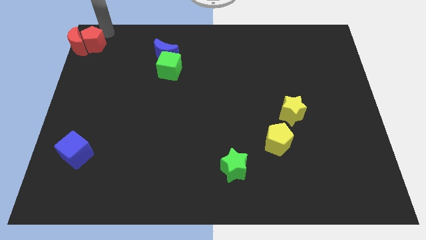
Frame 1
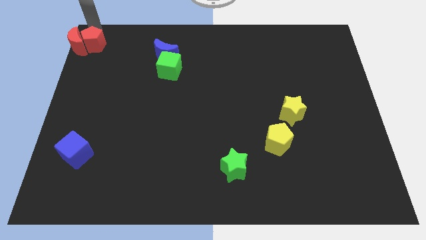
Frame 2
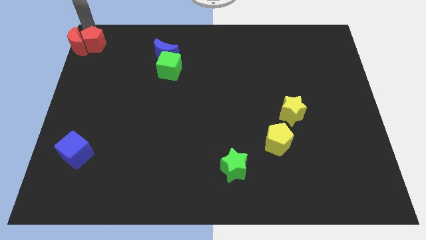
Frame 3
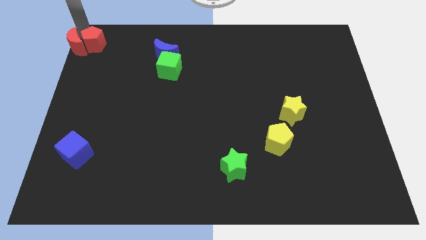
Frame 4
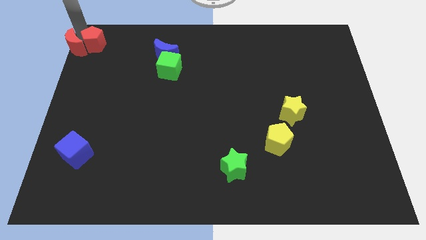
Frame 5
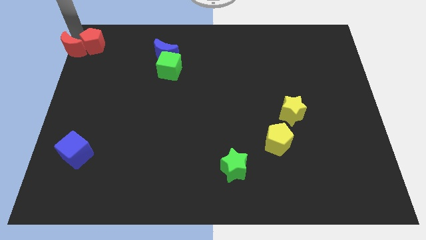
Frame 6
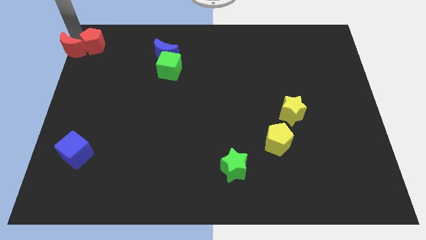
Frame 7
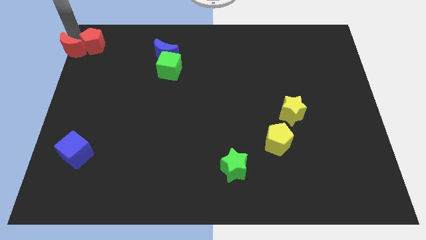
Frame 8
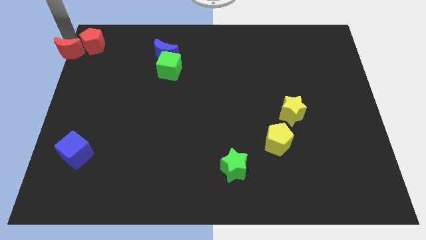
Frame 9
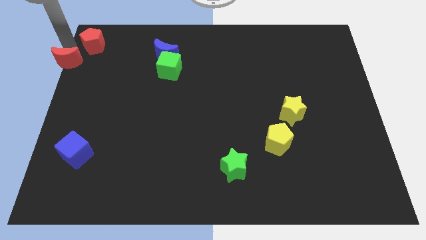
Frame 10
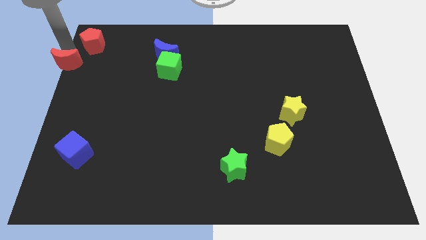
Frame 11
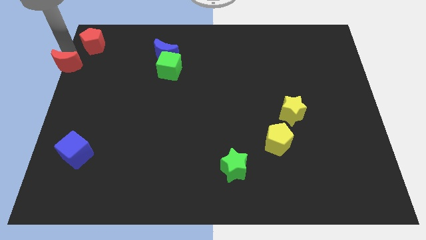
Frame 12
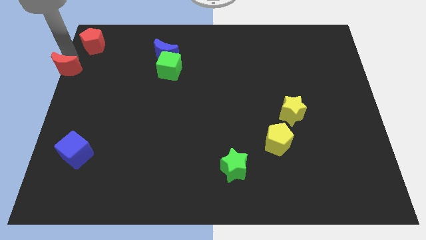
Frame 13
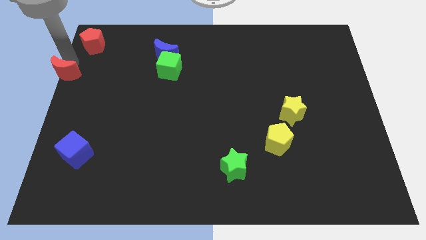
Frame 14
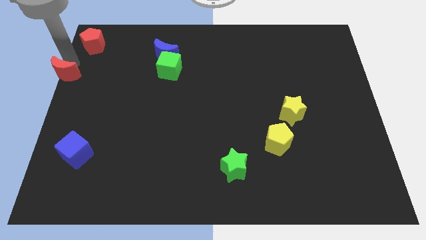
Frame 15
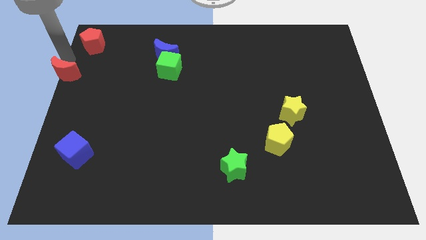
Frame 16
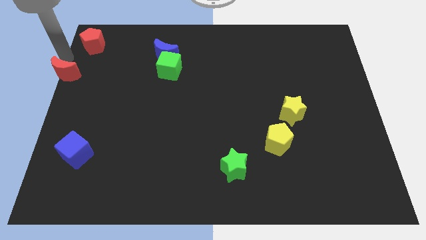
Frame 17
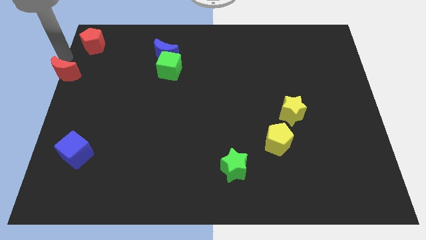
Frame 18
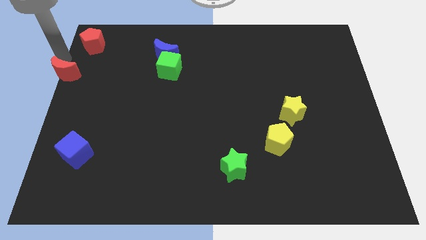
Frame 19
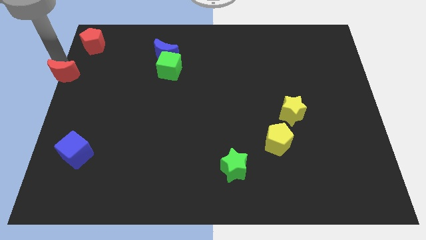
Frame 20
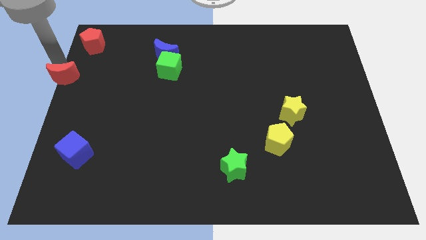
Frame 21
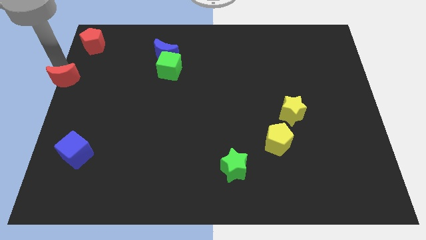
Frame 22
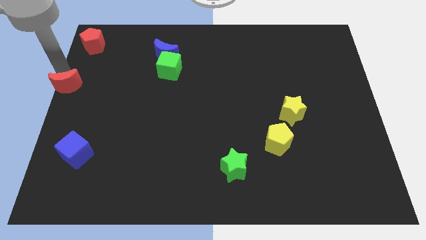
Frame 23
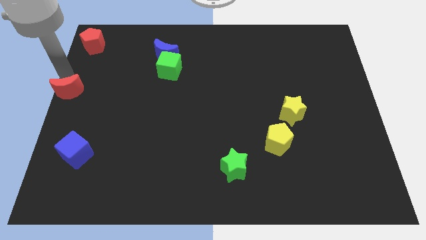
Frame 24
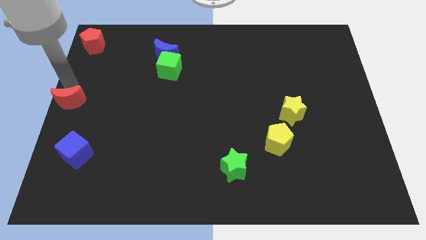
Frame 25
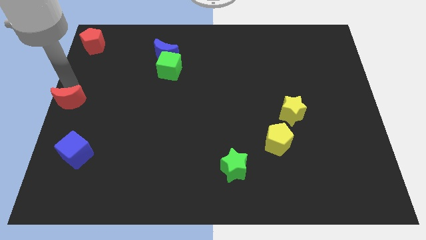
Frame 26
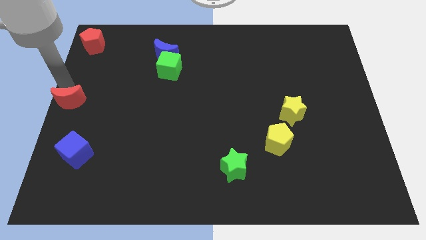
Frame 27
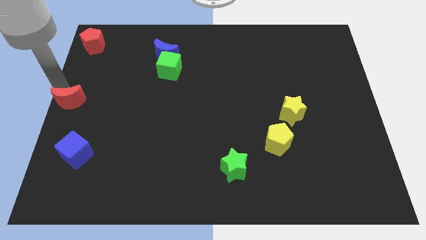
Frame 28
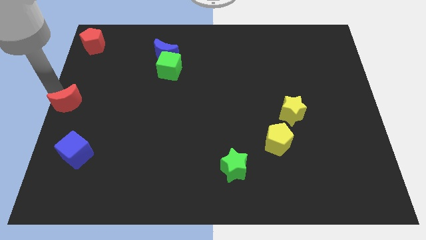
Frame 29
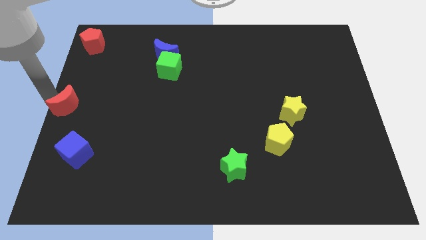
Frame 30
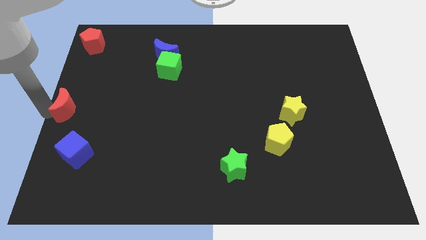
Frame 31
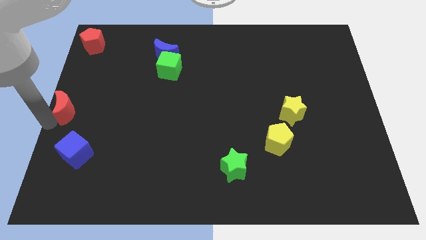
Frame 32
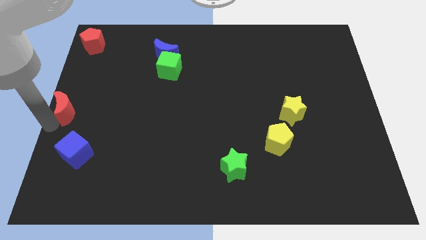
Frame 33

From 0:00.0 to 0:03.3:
move the red crescent to the center left of the board

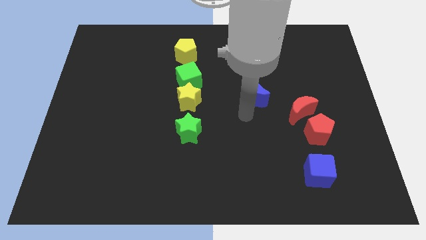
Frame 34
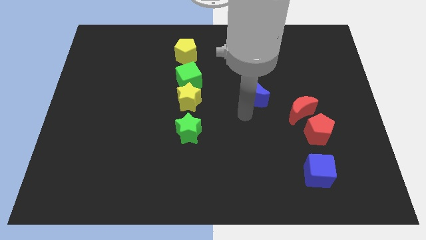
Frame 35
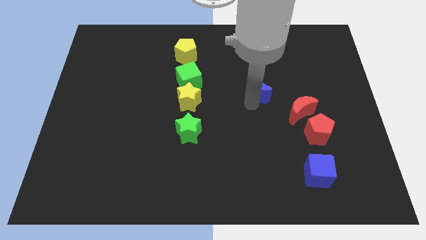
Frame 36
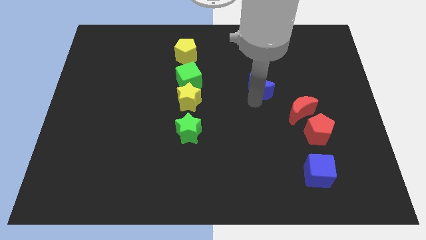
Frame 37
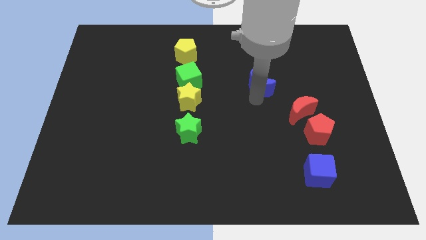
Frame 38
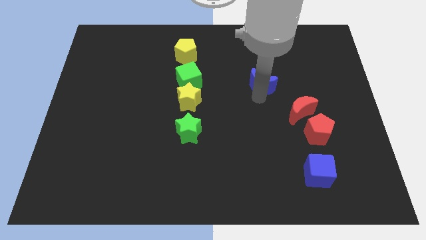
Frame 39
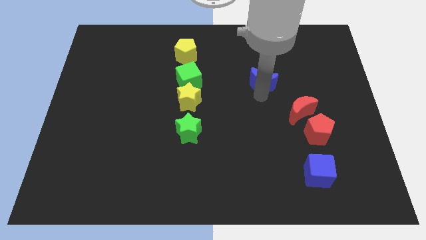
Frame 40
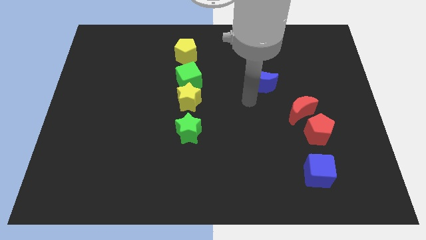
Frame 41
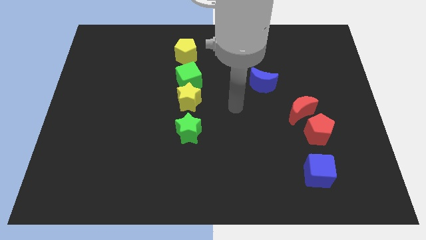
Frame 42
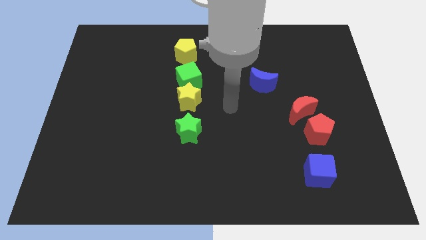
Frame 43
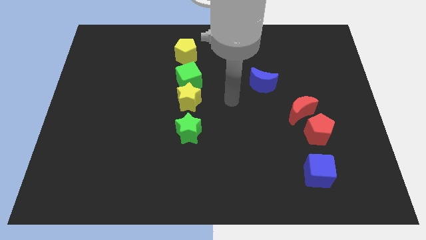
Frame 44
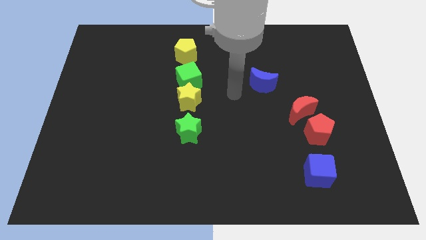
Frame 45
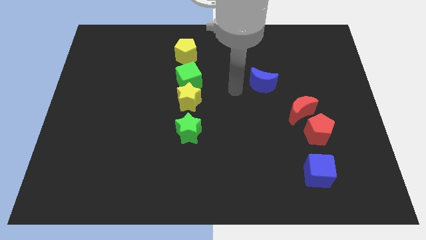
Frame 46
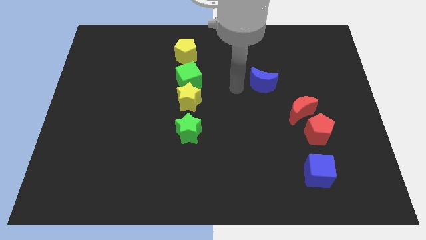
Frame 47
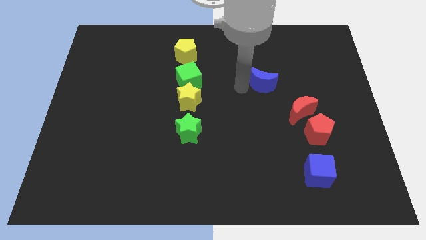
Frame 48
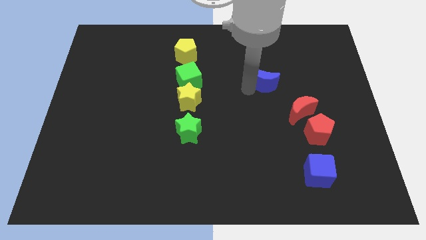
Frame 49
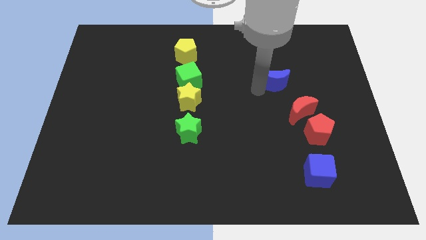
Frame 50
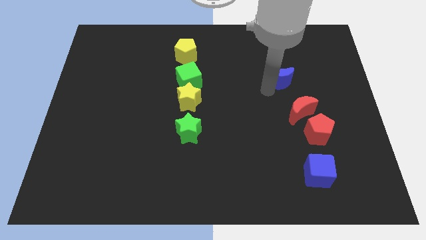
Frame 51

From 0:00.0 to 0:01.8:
move the blue crescent above to the red crescent

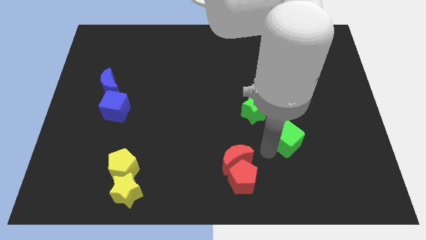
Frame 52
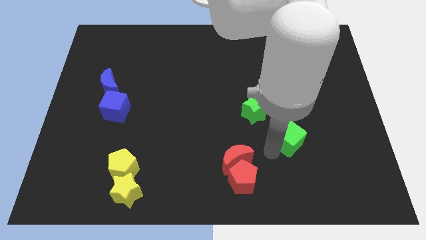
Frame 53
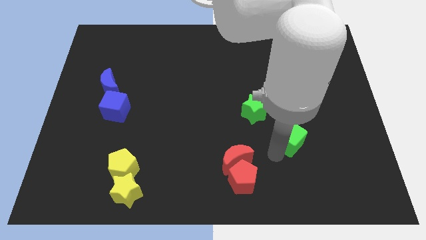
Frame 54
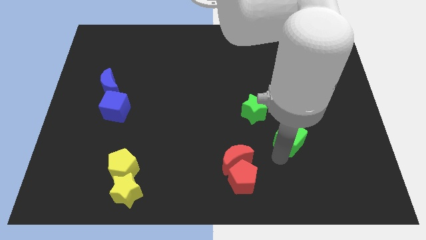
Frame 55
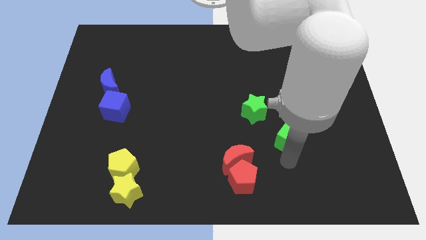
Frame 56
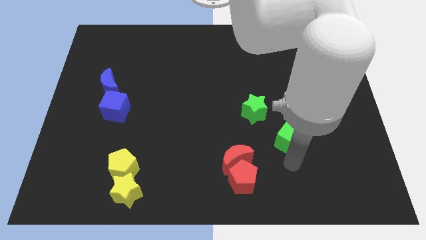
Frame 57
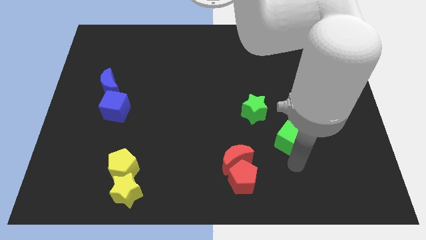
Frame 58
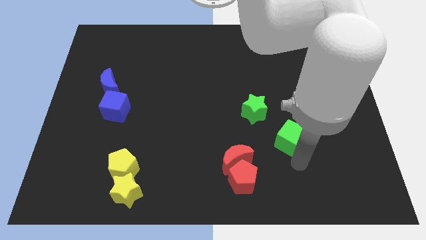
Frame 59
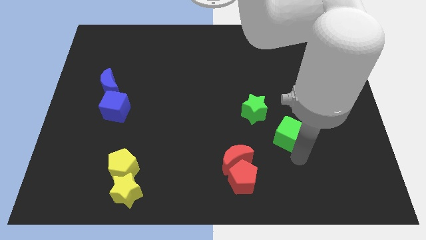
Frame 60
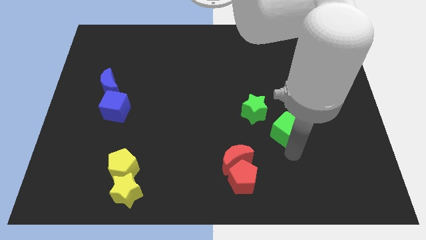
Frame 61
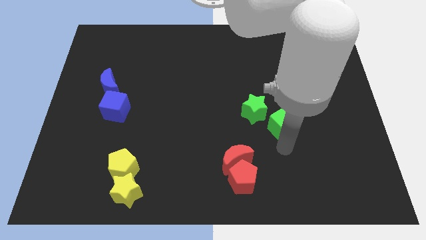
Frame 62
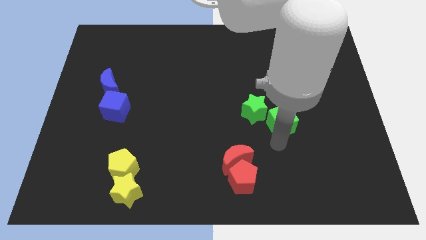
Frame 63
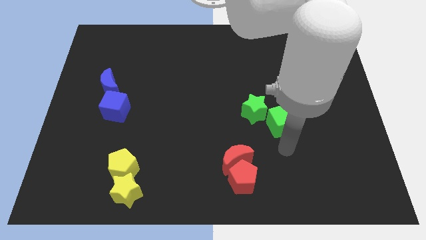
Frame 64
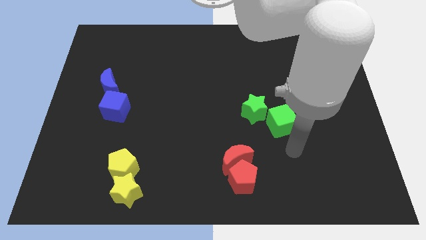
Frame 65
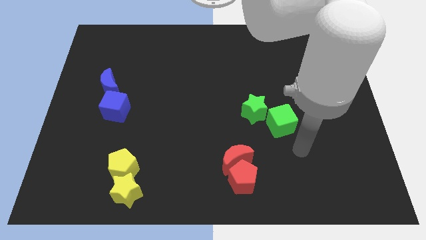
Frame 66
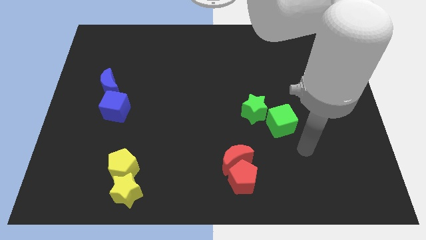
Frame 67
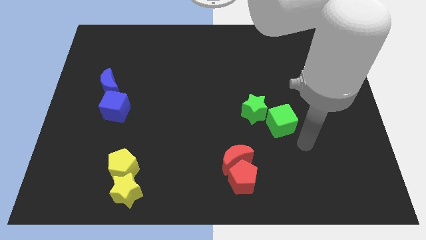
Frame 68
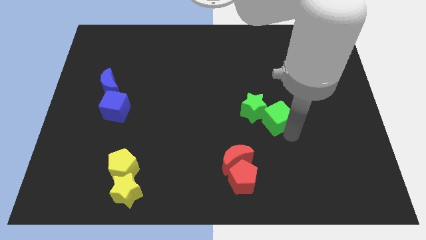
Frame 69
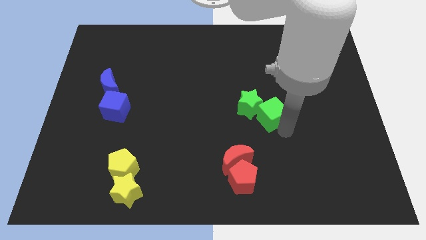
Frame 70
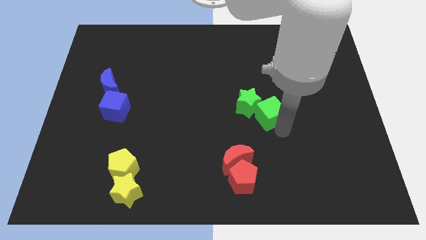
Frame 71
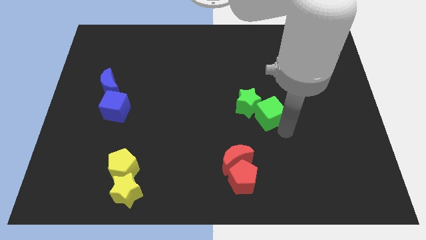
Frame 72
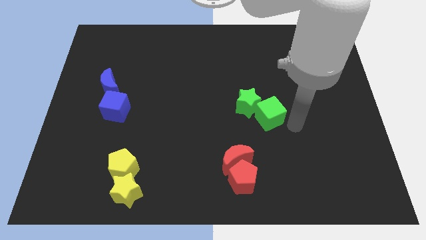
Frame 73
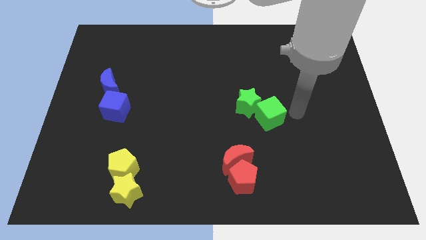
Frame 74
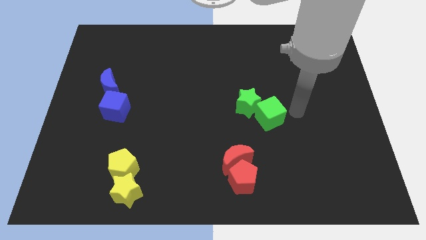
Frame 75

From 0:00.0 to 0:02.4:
move the green cube near to the green star

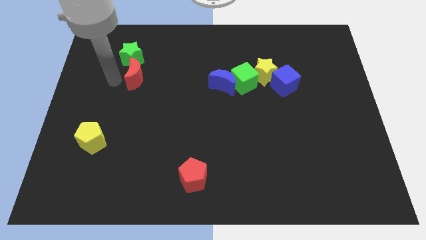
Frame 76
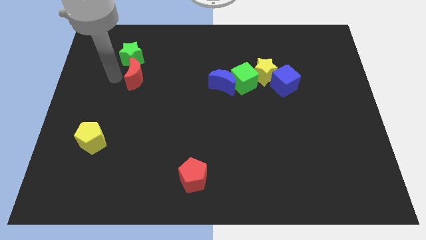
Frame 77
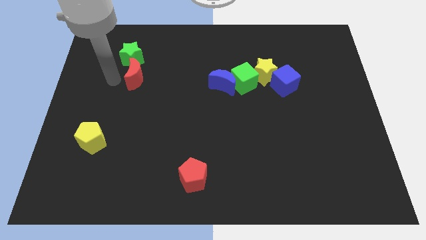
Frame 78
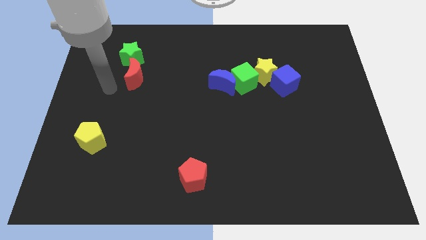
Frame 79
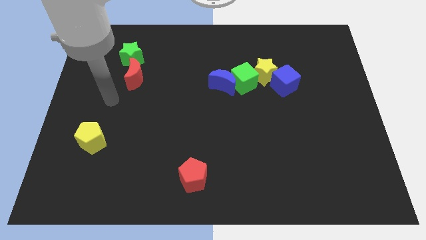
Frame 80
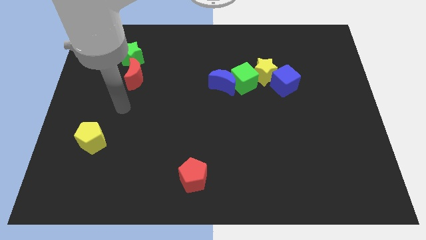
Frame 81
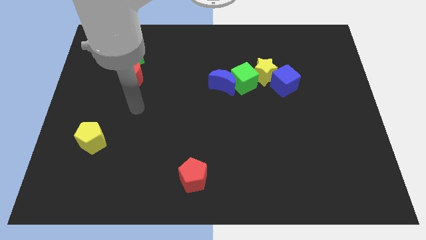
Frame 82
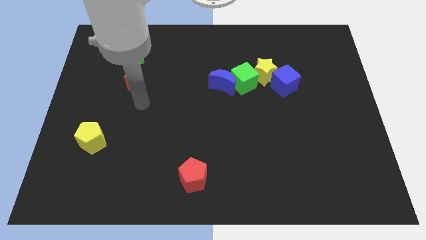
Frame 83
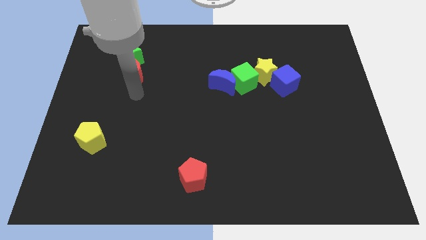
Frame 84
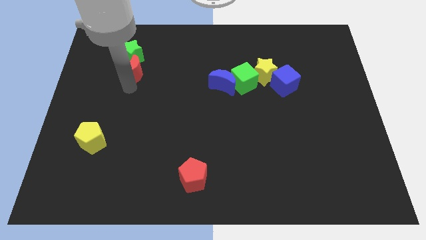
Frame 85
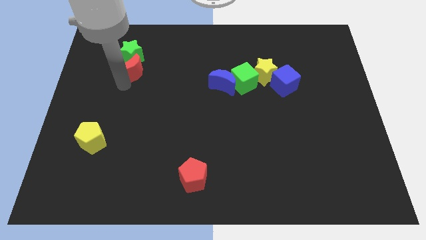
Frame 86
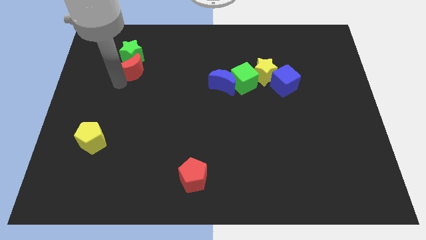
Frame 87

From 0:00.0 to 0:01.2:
place your arm to the bottom of red moon

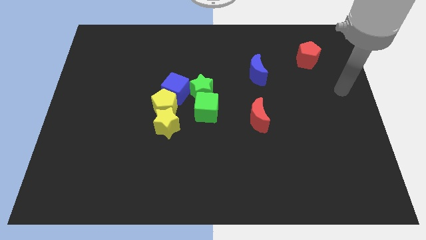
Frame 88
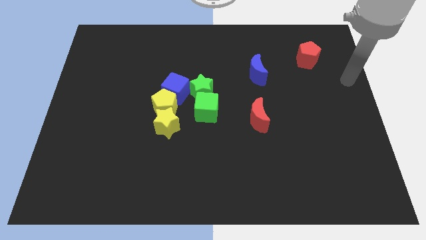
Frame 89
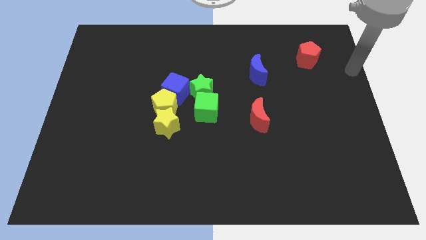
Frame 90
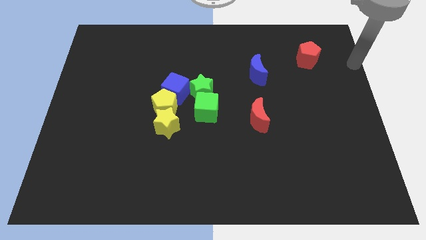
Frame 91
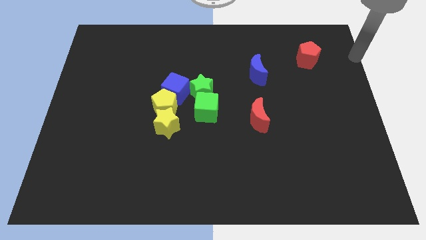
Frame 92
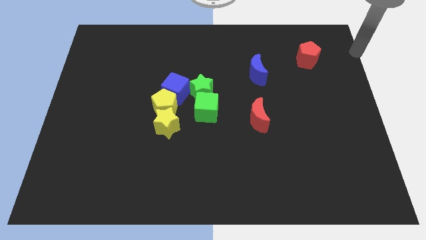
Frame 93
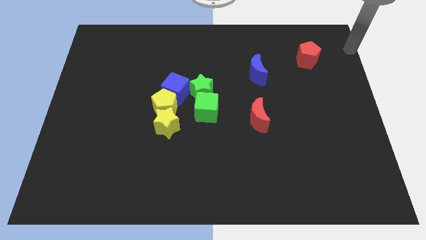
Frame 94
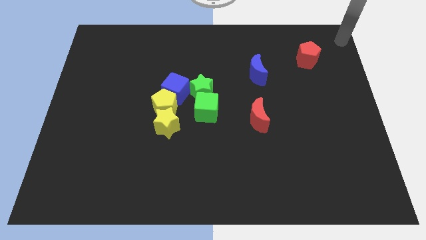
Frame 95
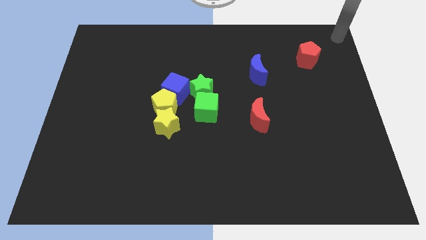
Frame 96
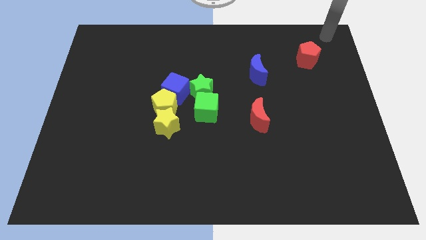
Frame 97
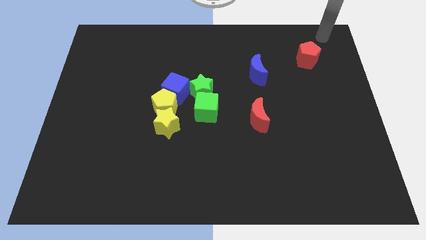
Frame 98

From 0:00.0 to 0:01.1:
move your arm towards top right
